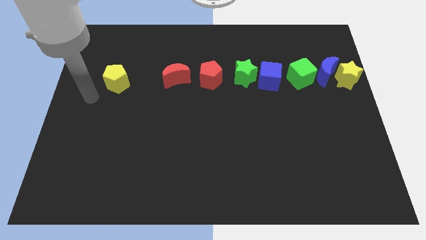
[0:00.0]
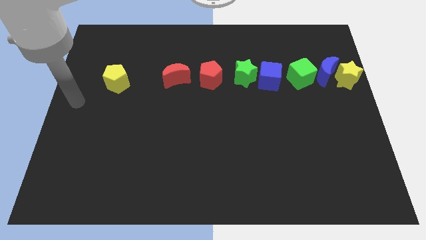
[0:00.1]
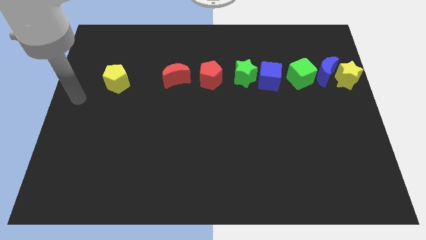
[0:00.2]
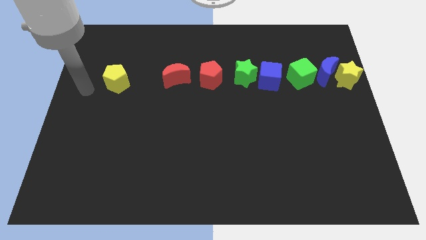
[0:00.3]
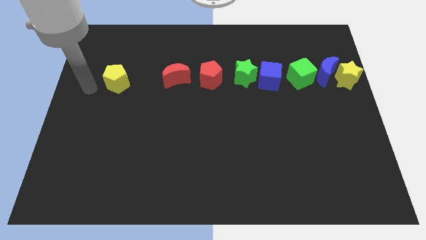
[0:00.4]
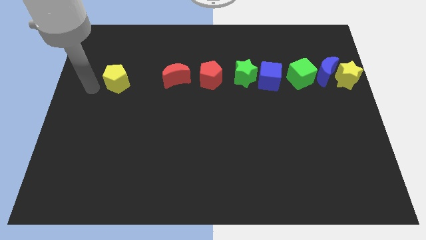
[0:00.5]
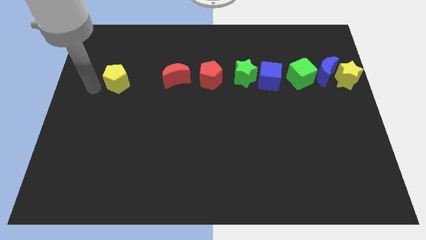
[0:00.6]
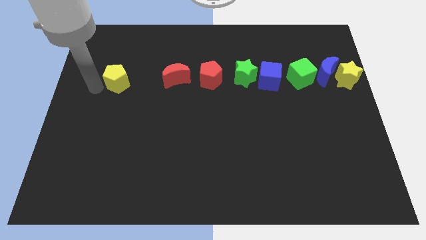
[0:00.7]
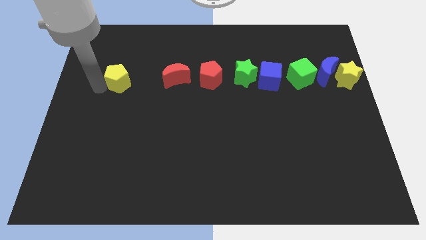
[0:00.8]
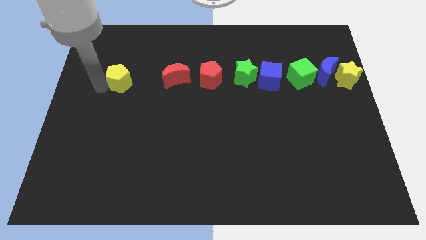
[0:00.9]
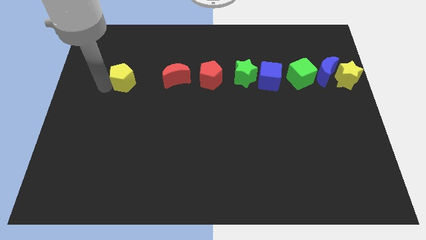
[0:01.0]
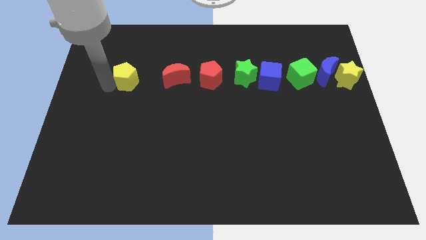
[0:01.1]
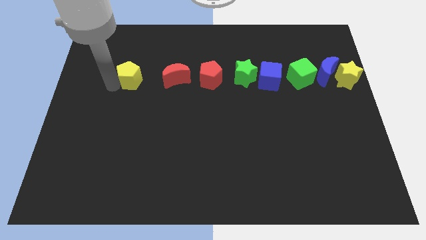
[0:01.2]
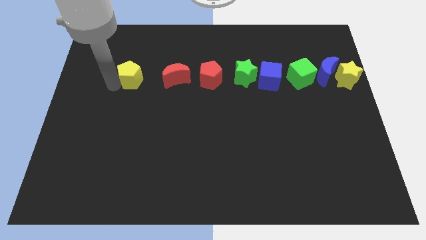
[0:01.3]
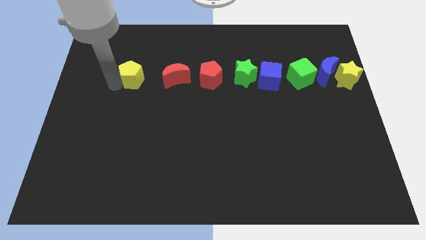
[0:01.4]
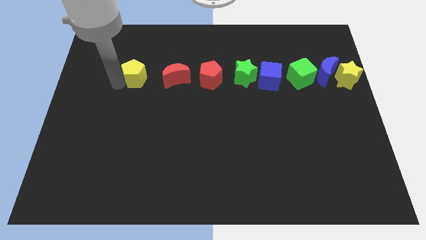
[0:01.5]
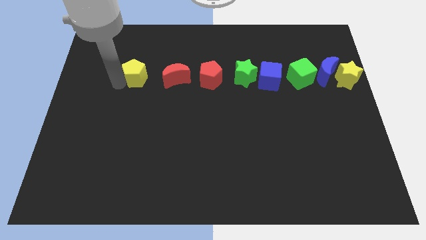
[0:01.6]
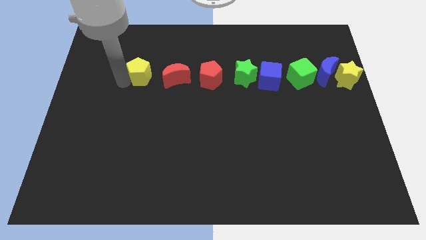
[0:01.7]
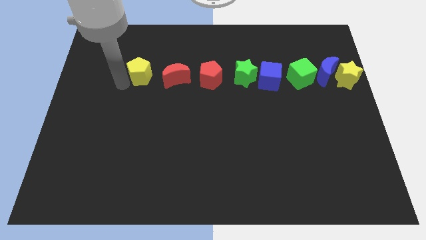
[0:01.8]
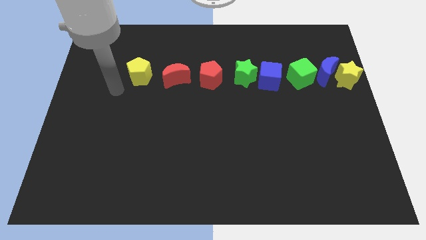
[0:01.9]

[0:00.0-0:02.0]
push the yellow pentagon to the left of the red crescent

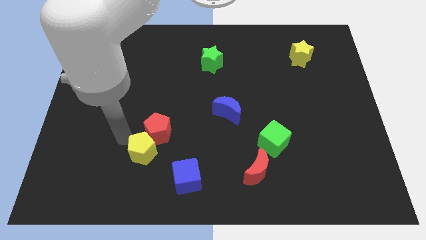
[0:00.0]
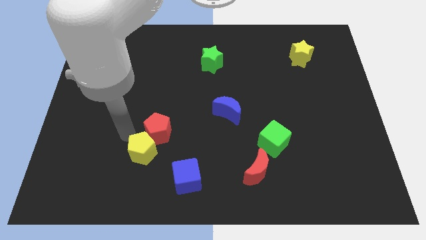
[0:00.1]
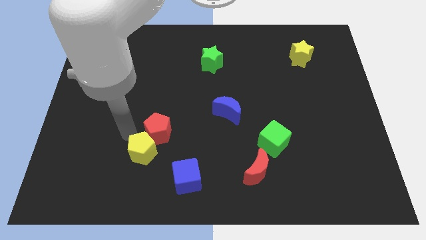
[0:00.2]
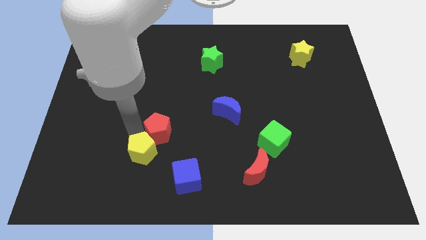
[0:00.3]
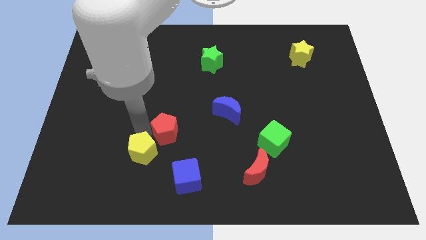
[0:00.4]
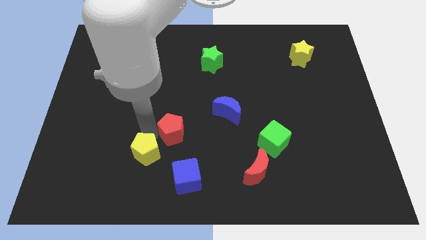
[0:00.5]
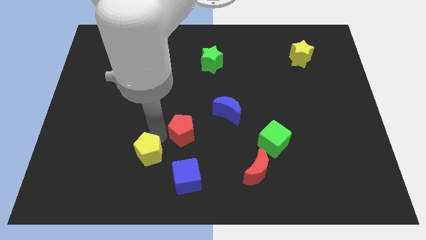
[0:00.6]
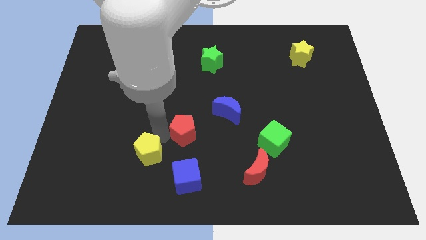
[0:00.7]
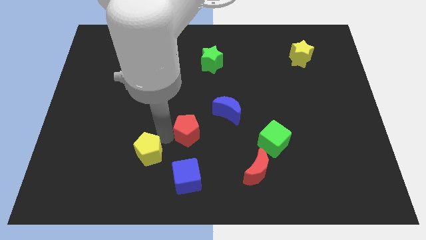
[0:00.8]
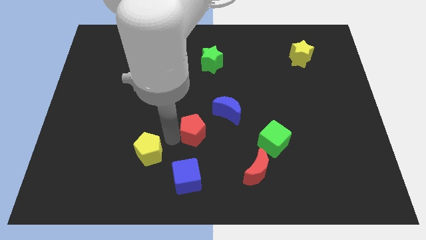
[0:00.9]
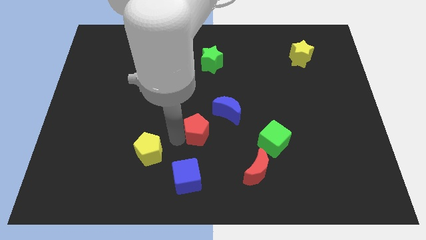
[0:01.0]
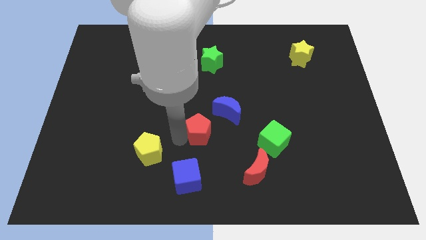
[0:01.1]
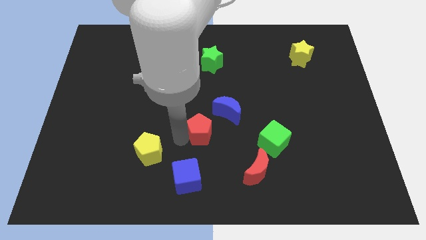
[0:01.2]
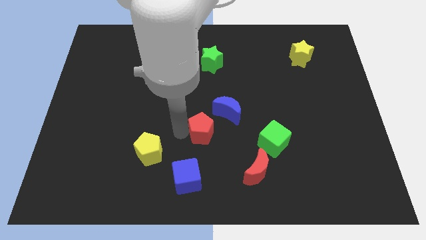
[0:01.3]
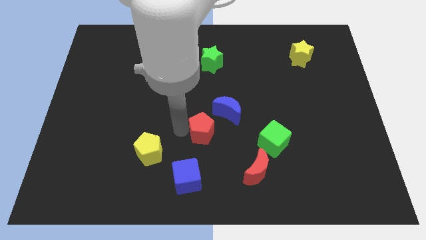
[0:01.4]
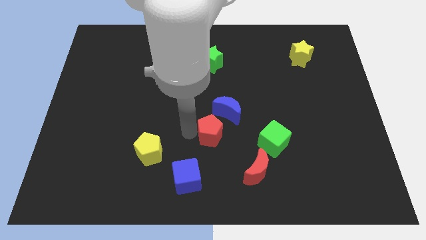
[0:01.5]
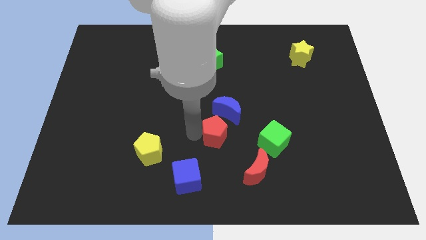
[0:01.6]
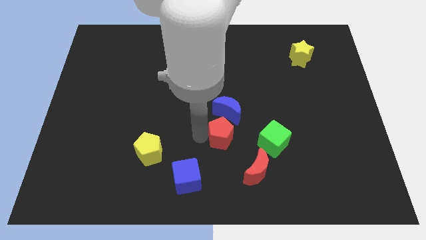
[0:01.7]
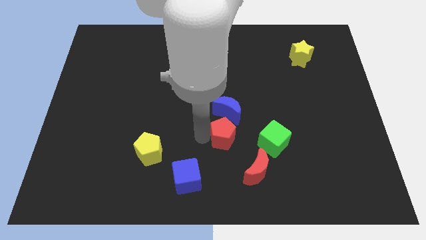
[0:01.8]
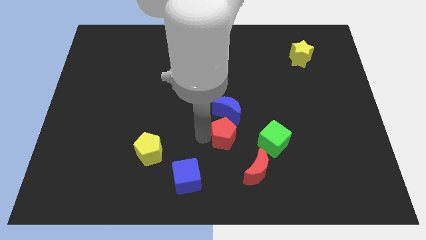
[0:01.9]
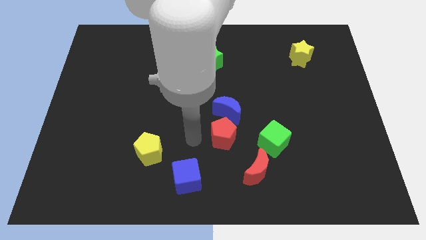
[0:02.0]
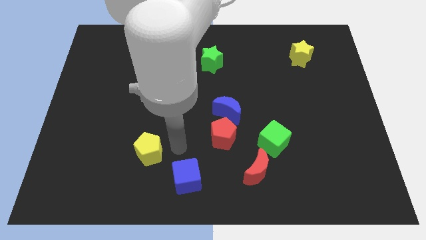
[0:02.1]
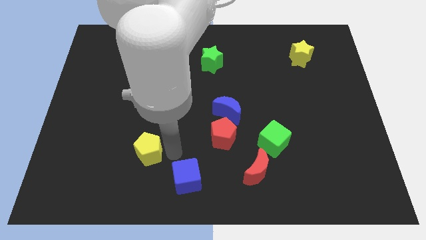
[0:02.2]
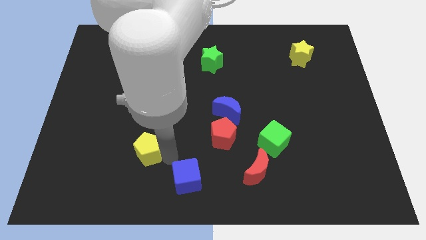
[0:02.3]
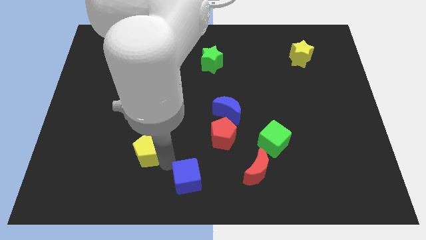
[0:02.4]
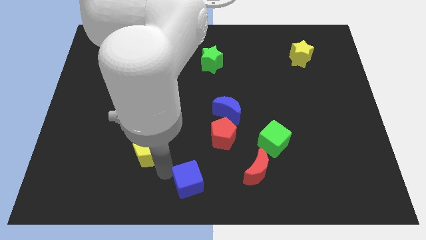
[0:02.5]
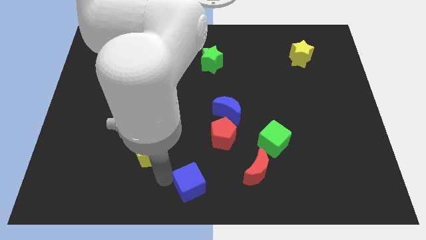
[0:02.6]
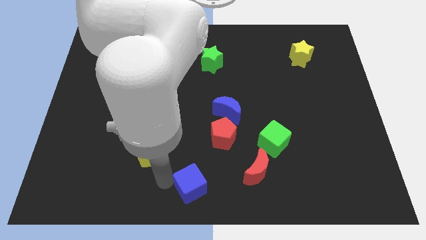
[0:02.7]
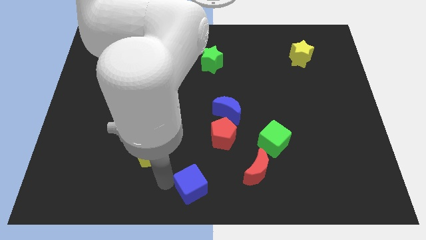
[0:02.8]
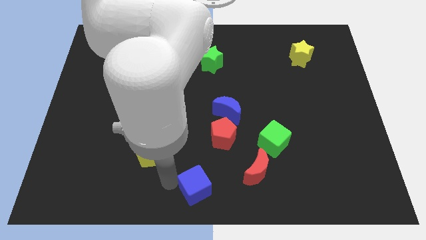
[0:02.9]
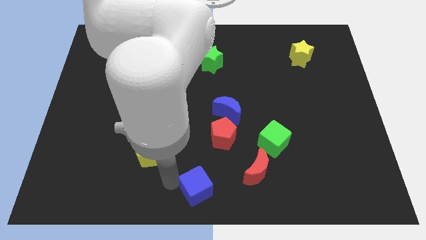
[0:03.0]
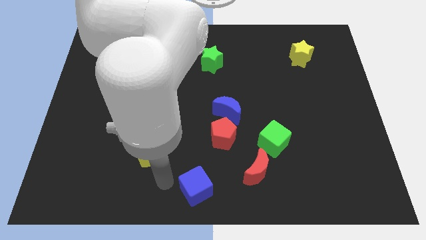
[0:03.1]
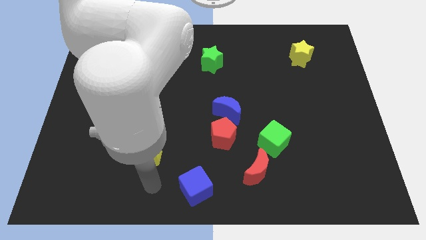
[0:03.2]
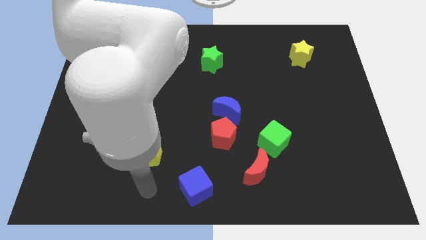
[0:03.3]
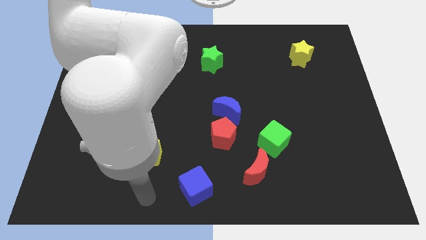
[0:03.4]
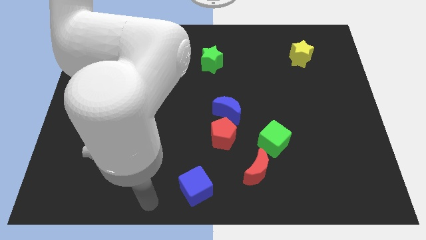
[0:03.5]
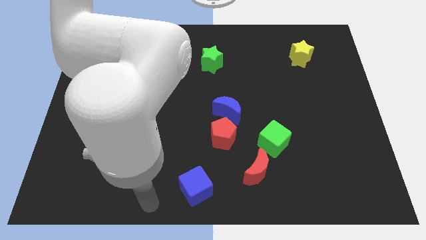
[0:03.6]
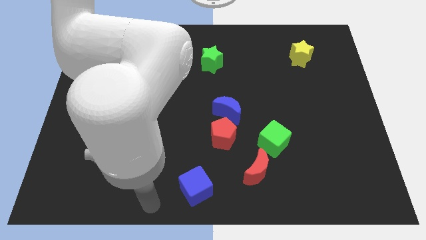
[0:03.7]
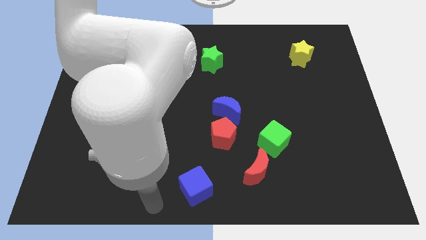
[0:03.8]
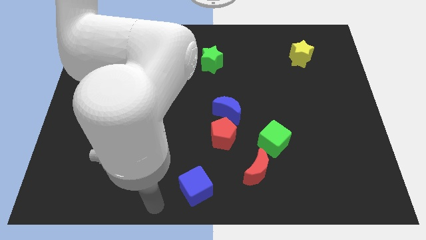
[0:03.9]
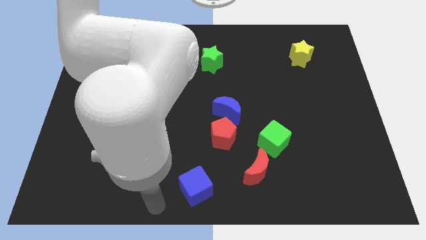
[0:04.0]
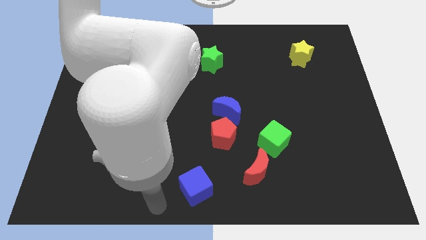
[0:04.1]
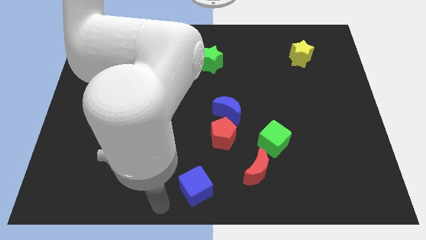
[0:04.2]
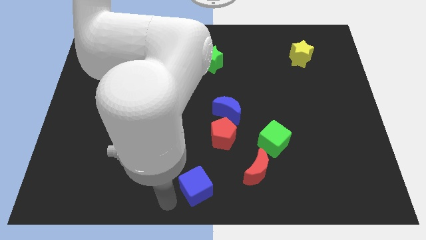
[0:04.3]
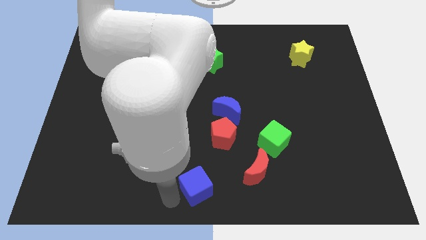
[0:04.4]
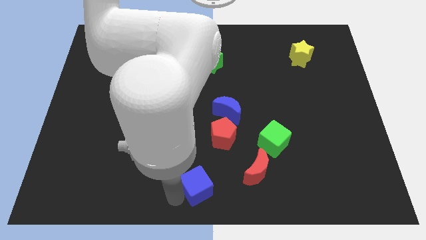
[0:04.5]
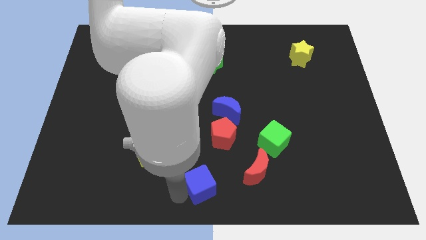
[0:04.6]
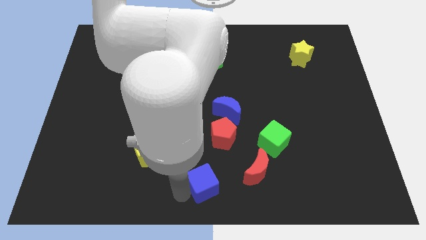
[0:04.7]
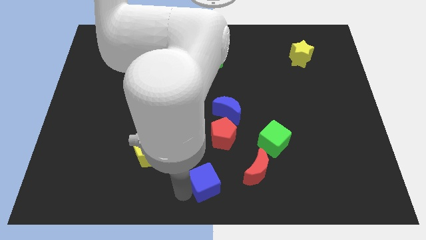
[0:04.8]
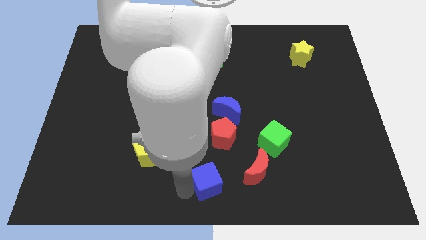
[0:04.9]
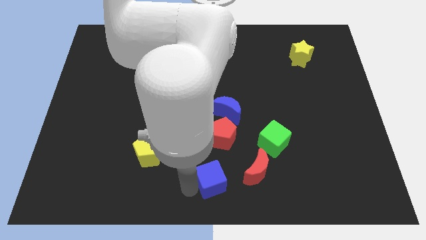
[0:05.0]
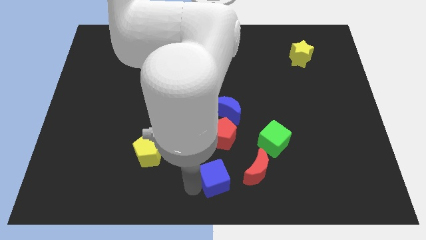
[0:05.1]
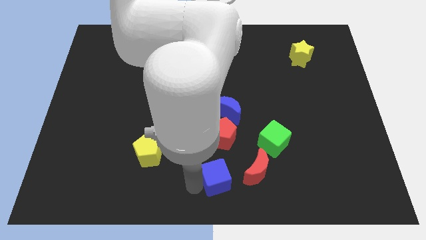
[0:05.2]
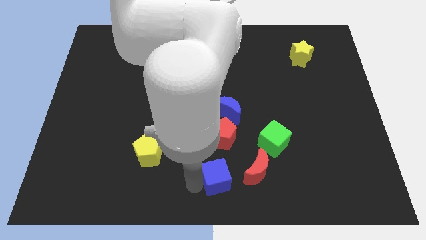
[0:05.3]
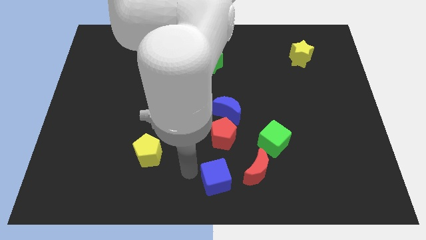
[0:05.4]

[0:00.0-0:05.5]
put the red pentagon and blue cube in a line vertically just below the blue crescent

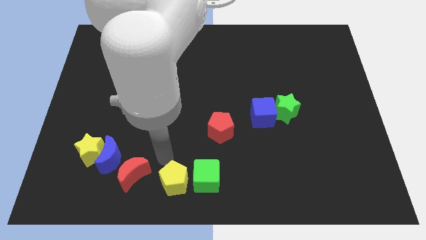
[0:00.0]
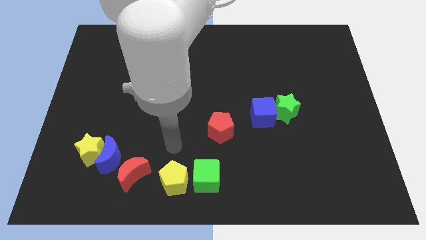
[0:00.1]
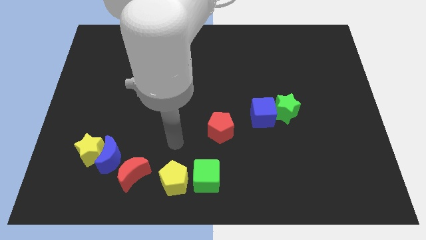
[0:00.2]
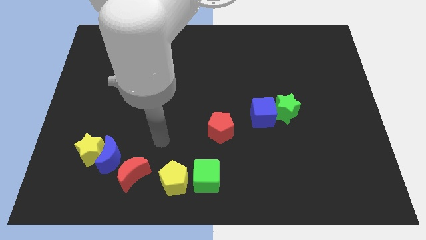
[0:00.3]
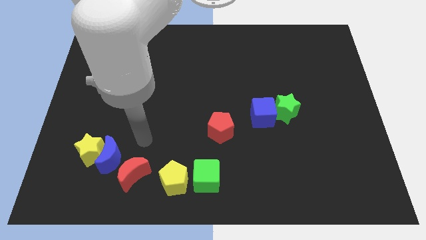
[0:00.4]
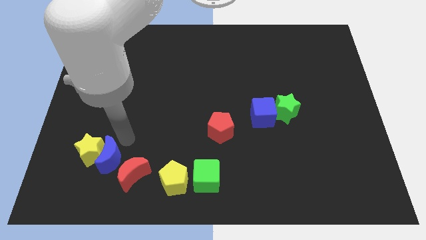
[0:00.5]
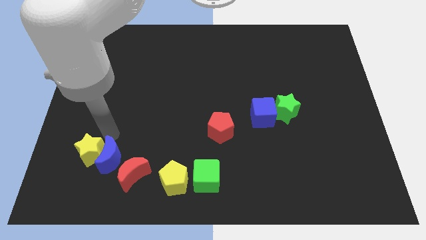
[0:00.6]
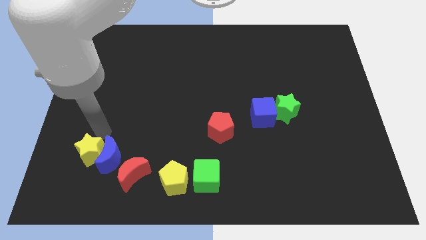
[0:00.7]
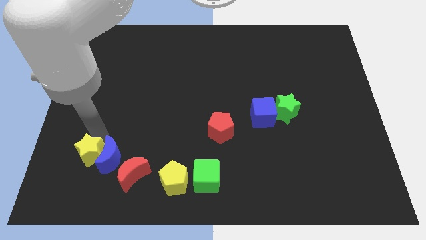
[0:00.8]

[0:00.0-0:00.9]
place the arm above the yellow star

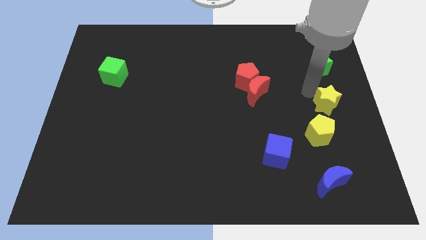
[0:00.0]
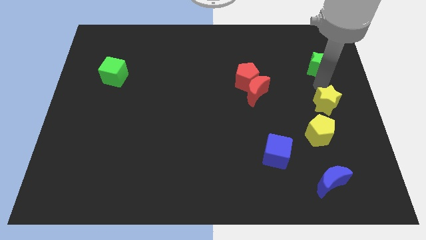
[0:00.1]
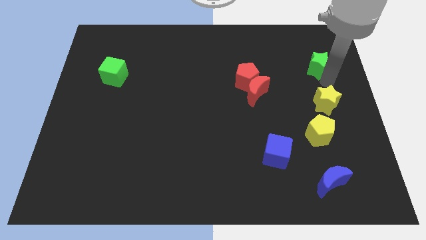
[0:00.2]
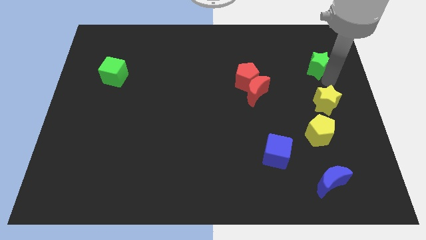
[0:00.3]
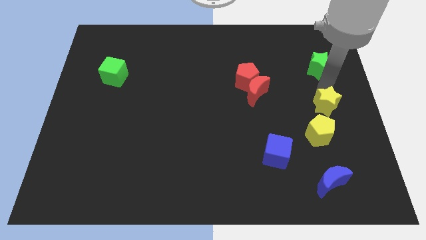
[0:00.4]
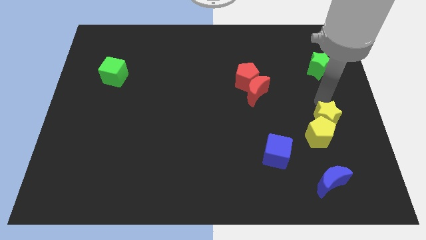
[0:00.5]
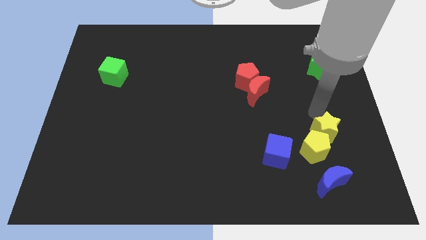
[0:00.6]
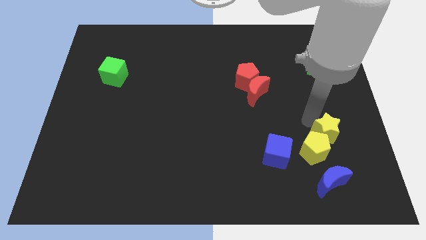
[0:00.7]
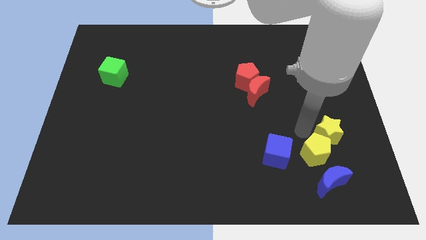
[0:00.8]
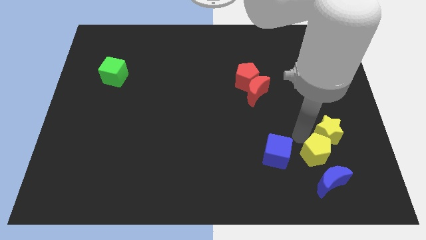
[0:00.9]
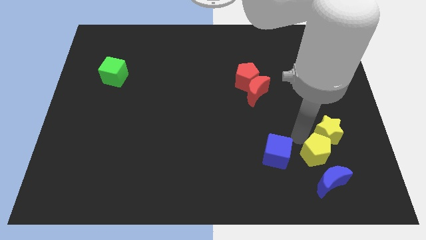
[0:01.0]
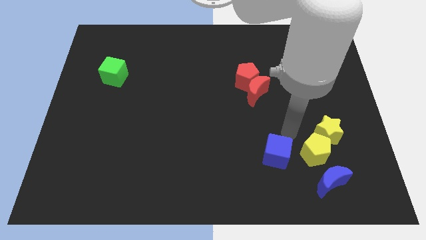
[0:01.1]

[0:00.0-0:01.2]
push yellow star into yellow pentagon
